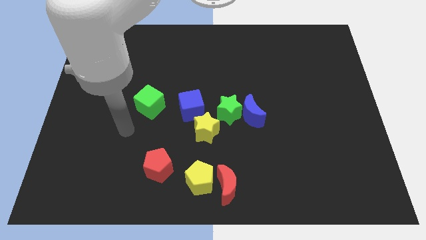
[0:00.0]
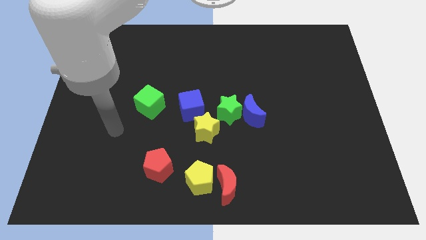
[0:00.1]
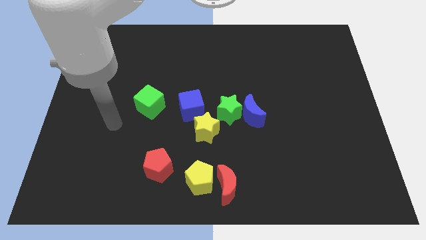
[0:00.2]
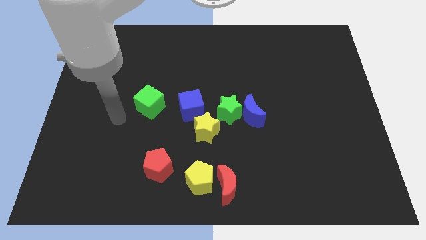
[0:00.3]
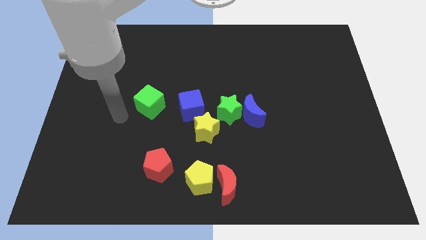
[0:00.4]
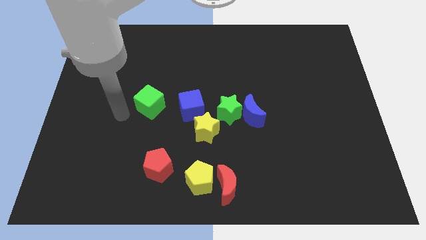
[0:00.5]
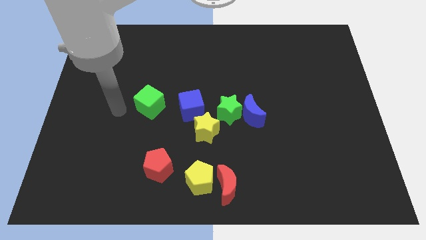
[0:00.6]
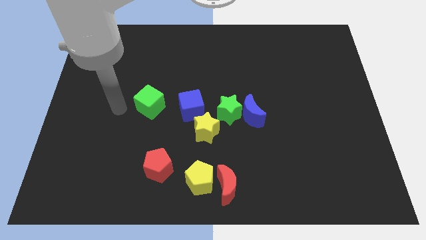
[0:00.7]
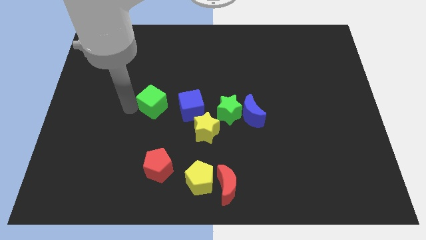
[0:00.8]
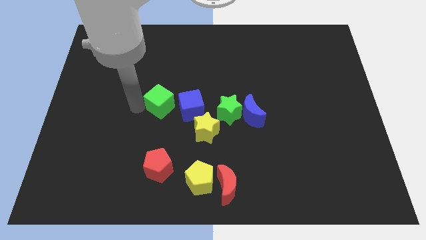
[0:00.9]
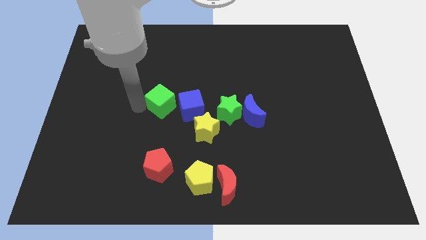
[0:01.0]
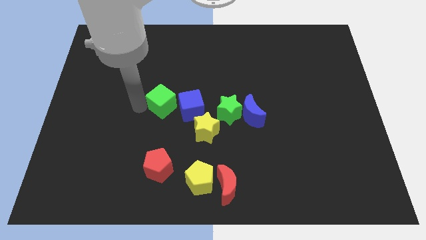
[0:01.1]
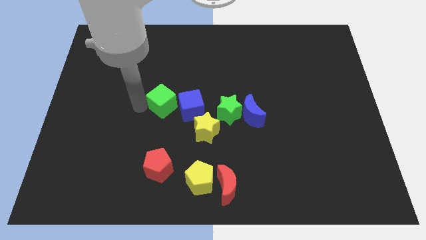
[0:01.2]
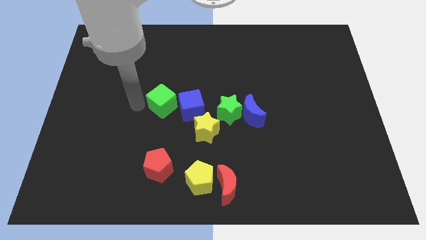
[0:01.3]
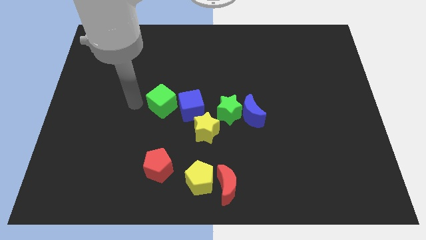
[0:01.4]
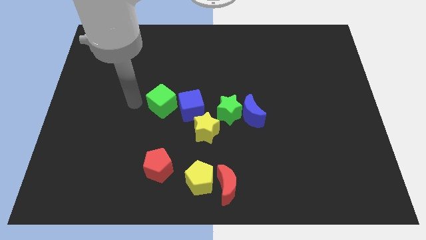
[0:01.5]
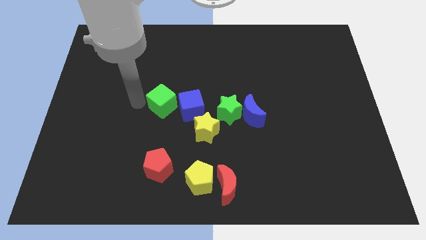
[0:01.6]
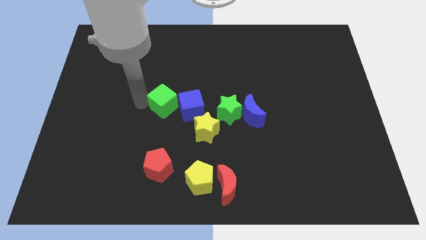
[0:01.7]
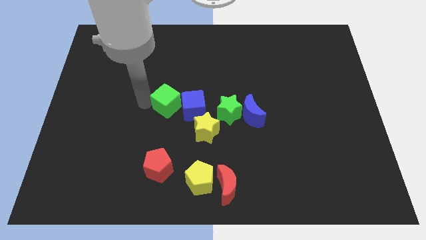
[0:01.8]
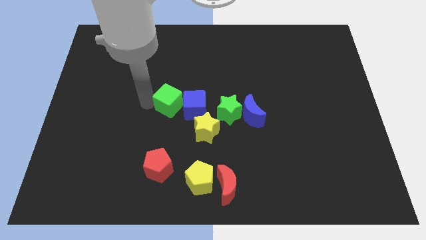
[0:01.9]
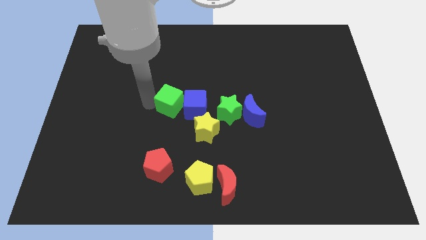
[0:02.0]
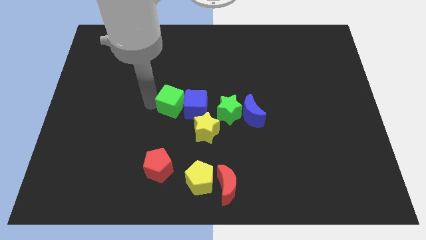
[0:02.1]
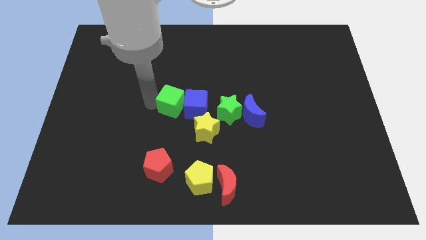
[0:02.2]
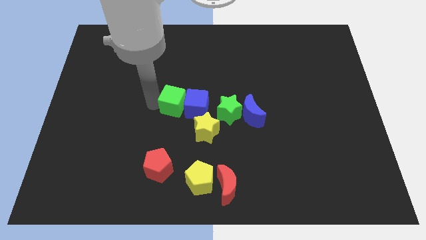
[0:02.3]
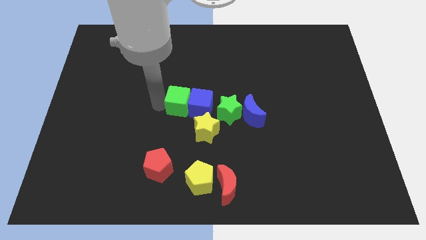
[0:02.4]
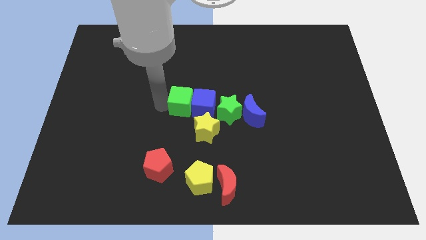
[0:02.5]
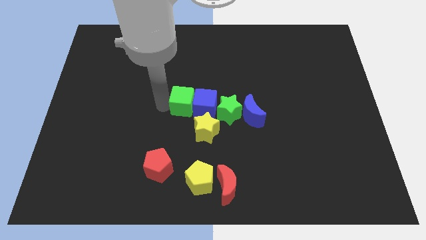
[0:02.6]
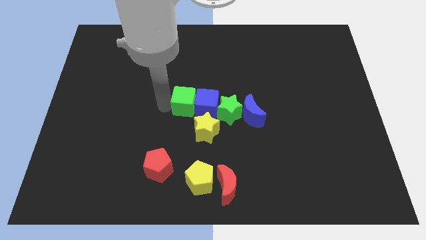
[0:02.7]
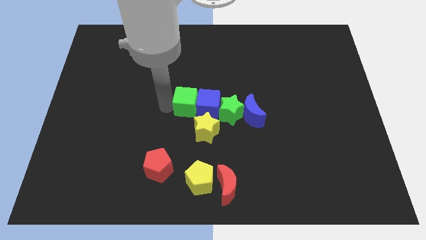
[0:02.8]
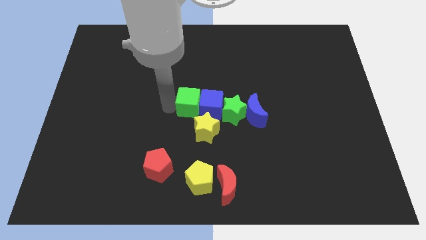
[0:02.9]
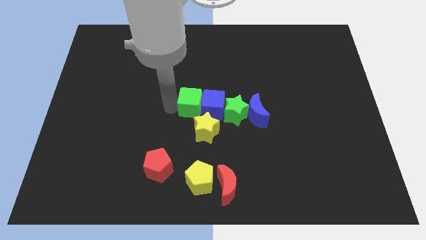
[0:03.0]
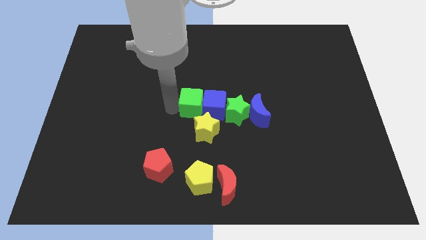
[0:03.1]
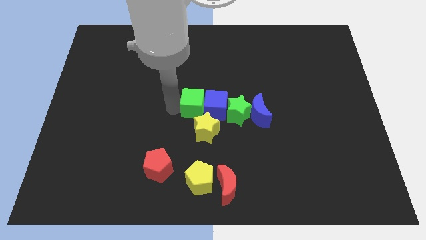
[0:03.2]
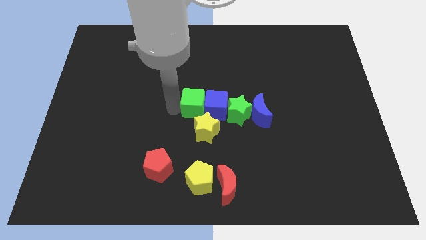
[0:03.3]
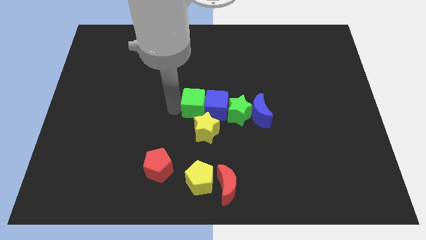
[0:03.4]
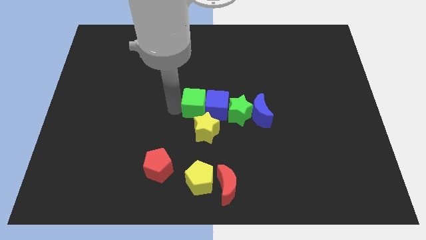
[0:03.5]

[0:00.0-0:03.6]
push the green cube into the blue cube

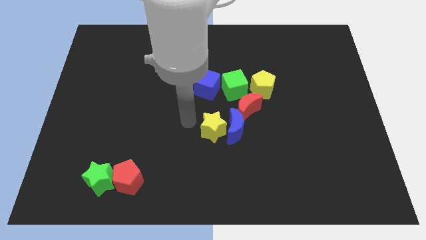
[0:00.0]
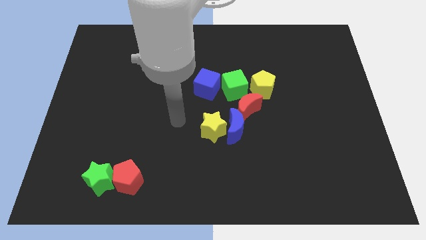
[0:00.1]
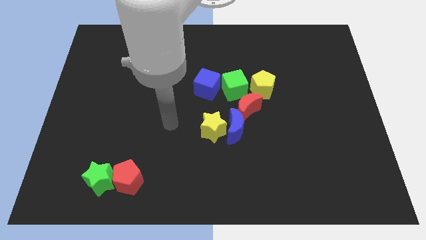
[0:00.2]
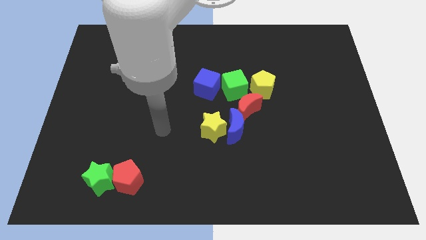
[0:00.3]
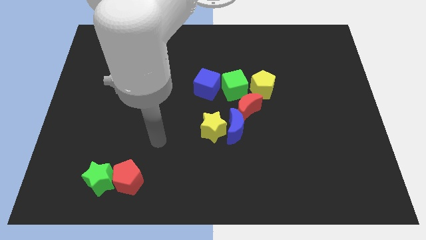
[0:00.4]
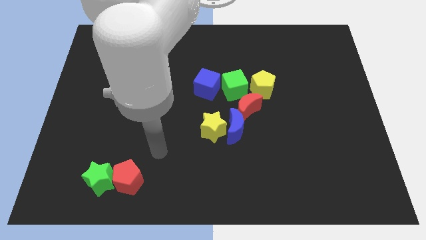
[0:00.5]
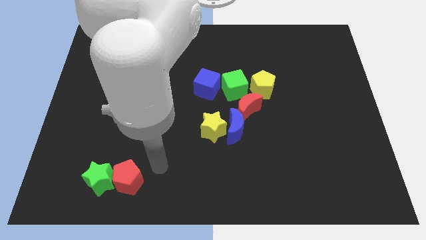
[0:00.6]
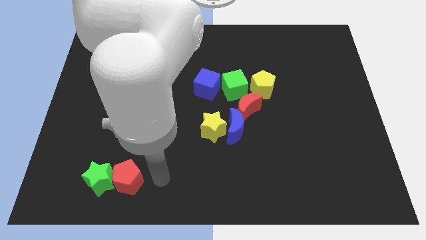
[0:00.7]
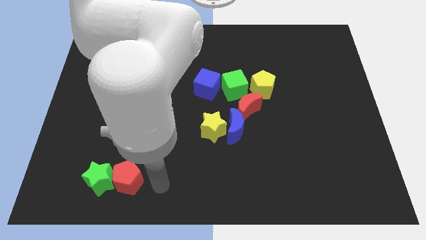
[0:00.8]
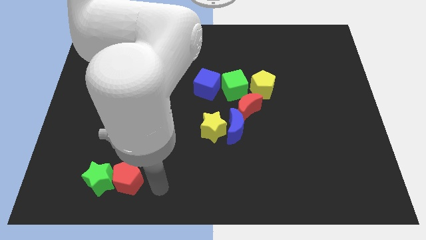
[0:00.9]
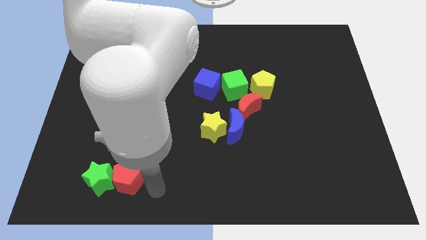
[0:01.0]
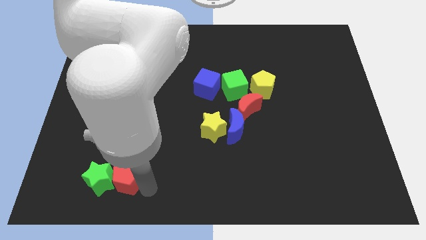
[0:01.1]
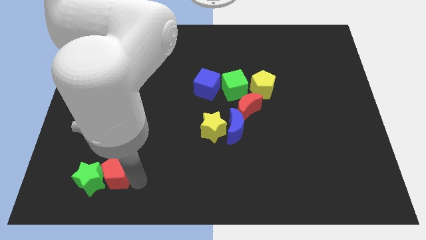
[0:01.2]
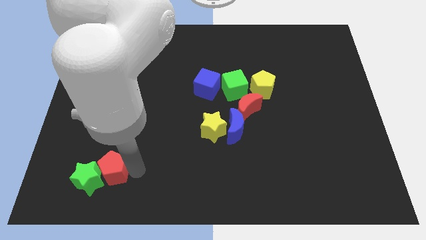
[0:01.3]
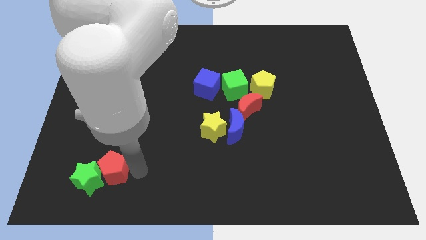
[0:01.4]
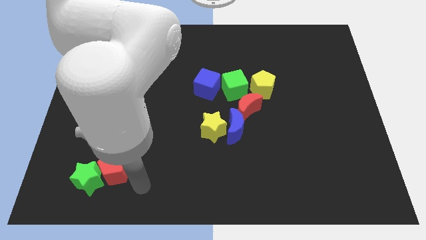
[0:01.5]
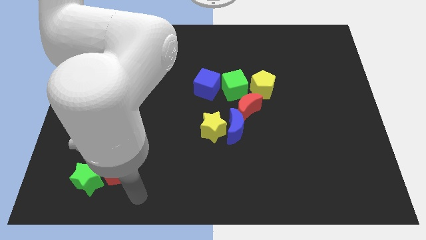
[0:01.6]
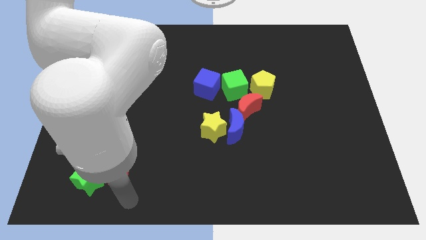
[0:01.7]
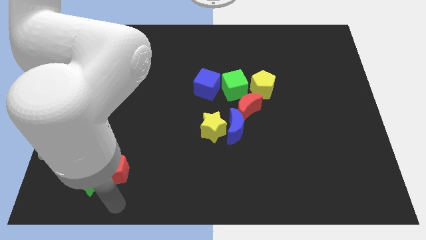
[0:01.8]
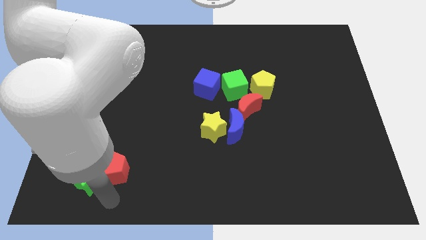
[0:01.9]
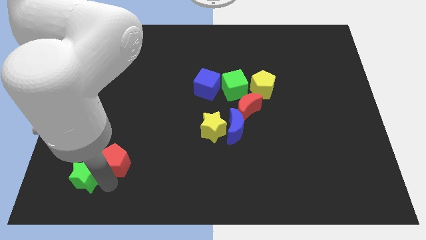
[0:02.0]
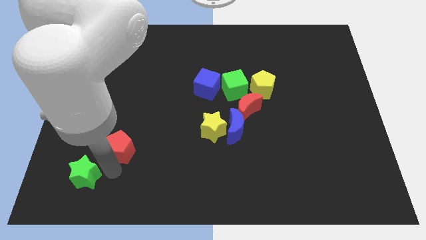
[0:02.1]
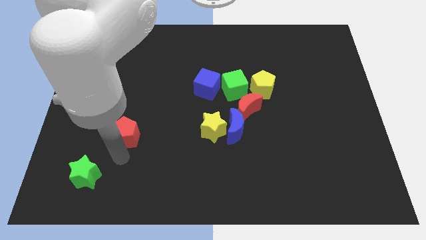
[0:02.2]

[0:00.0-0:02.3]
separate the red pentagon from green star

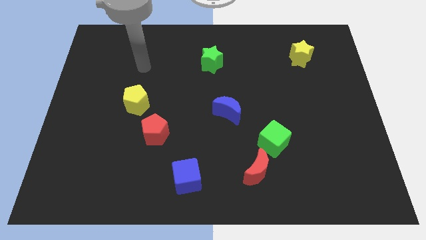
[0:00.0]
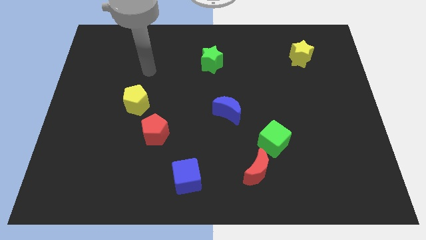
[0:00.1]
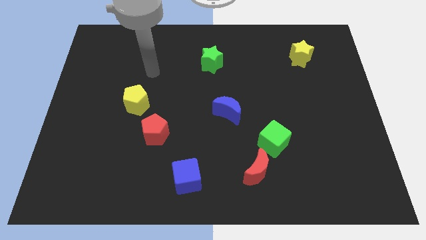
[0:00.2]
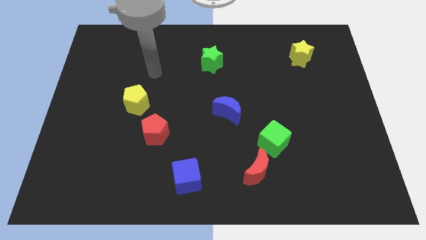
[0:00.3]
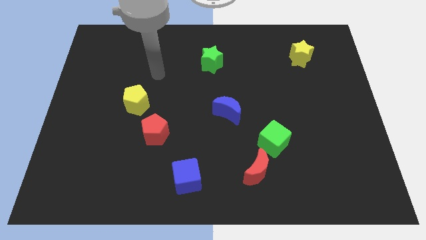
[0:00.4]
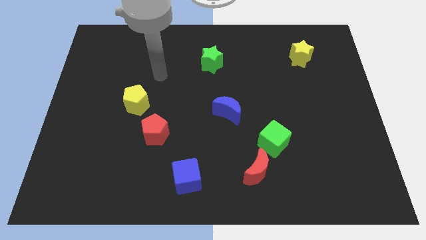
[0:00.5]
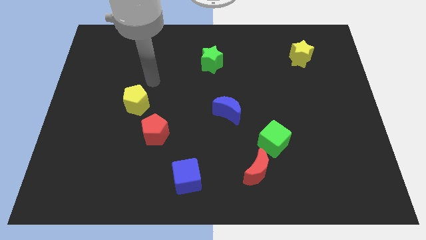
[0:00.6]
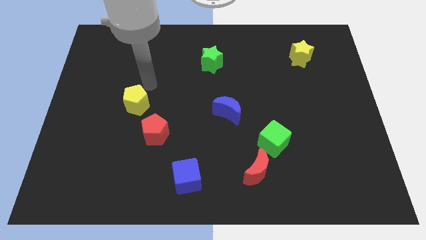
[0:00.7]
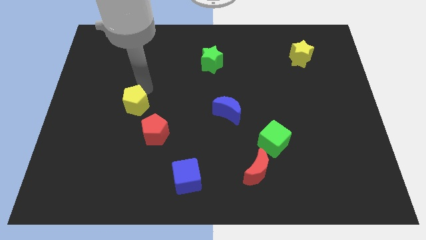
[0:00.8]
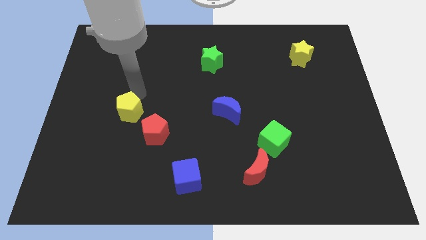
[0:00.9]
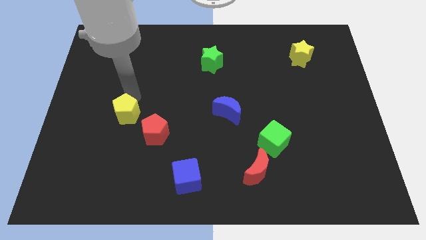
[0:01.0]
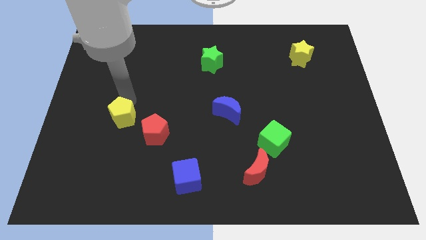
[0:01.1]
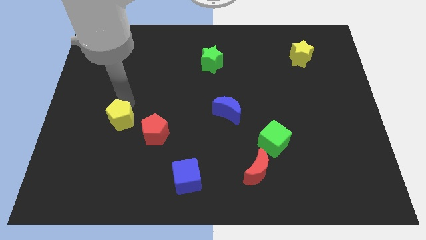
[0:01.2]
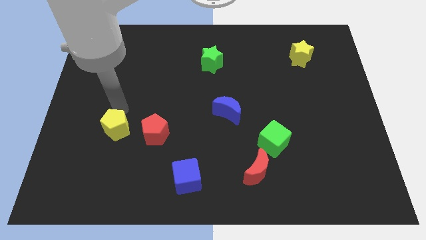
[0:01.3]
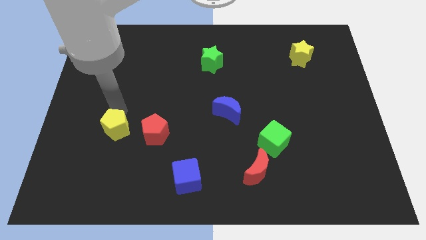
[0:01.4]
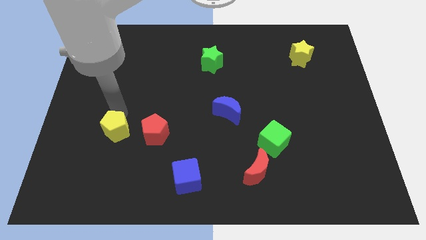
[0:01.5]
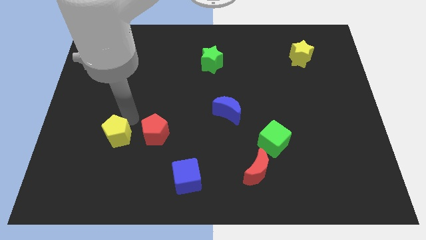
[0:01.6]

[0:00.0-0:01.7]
place the yellow pentagon to the left of the red pentagon

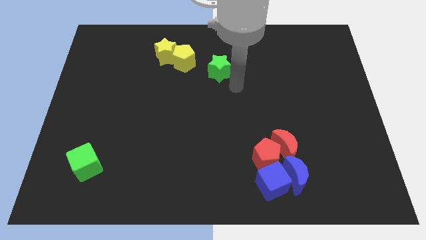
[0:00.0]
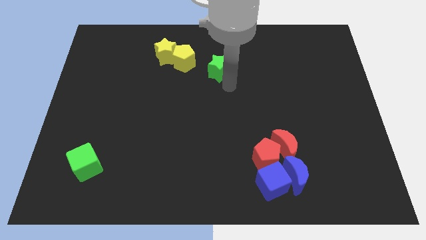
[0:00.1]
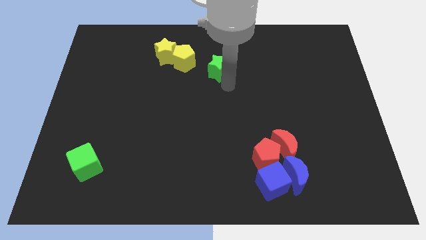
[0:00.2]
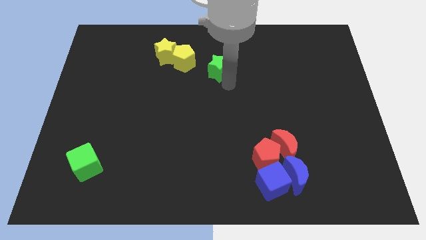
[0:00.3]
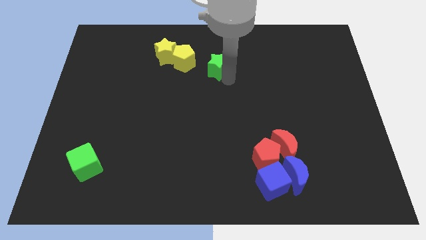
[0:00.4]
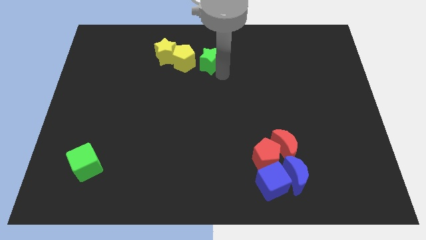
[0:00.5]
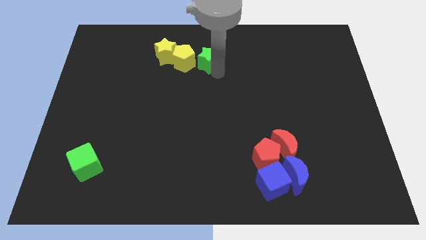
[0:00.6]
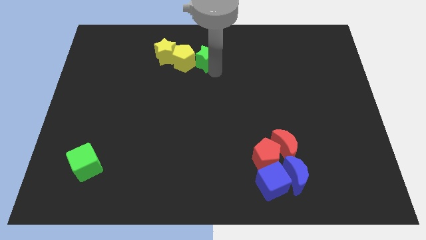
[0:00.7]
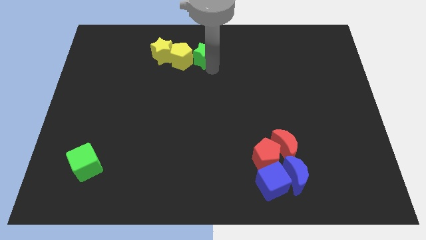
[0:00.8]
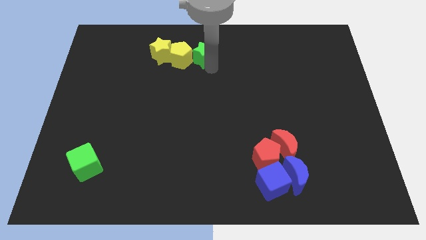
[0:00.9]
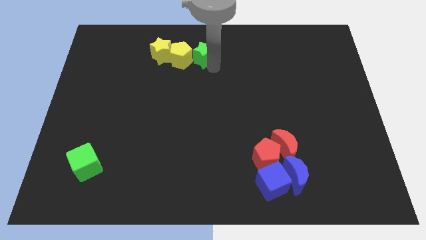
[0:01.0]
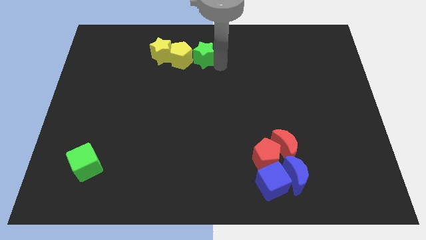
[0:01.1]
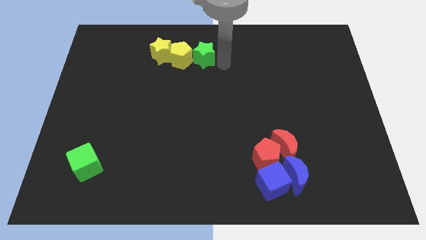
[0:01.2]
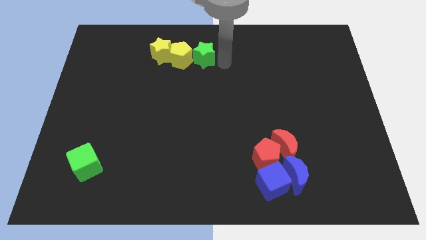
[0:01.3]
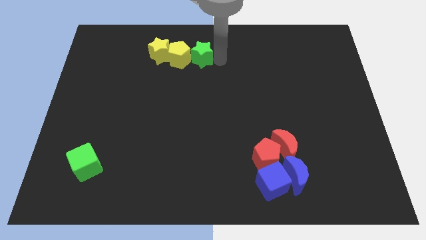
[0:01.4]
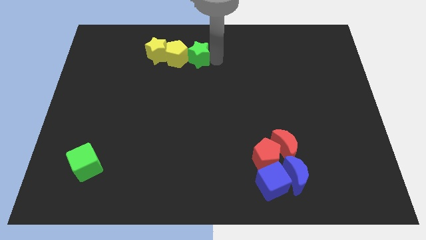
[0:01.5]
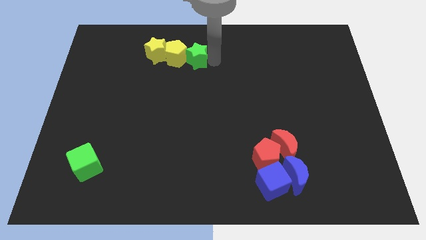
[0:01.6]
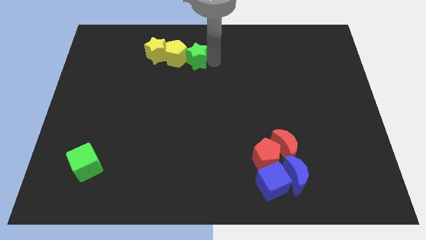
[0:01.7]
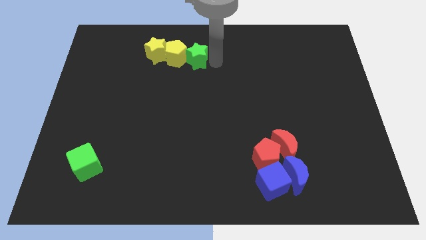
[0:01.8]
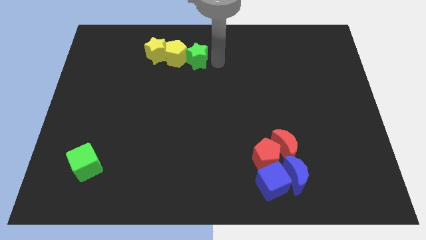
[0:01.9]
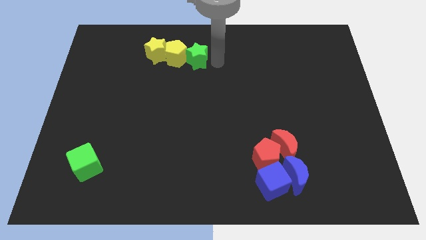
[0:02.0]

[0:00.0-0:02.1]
push the green star into yellow pentagon
